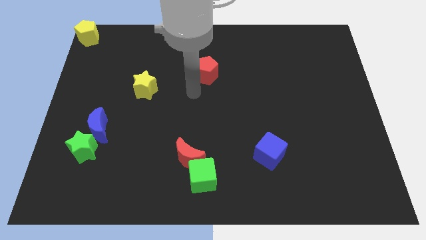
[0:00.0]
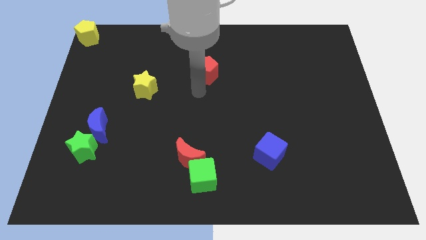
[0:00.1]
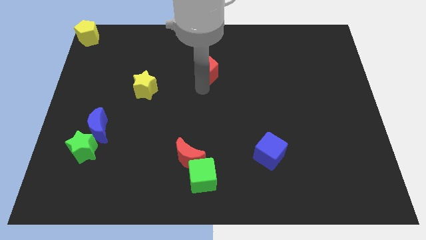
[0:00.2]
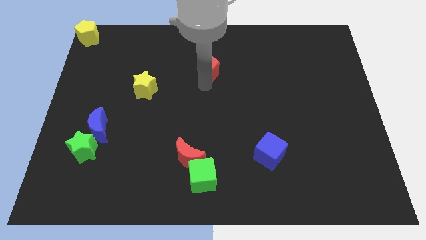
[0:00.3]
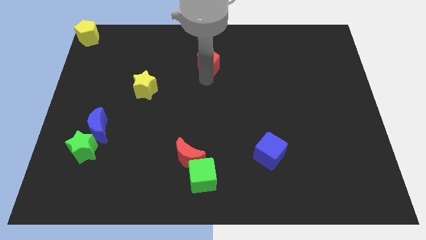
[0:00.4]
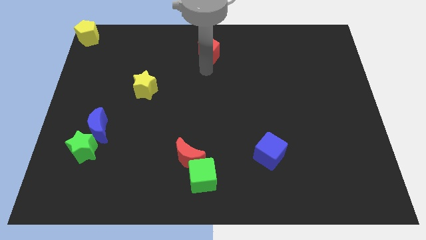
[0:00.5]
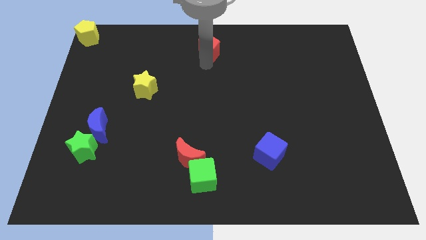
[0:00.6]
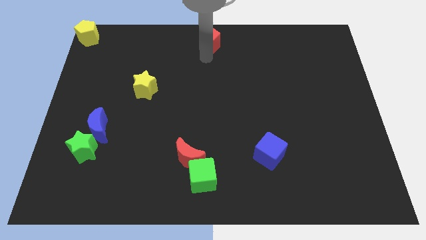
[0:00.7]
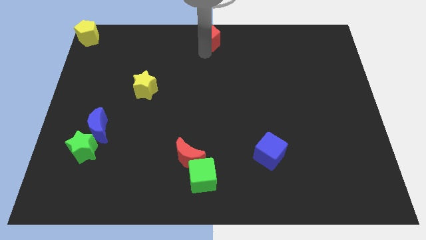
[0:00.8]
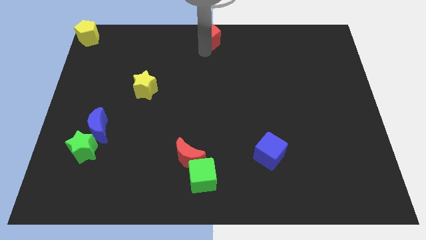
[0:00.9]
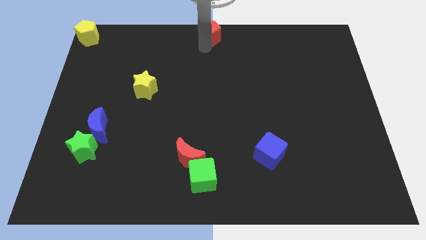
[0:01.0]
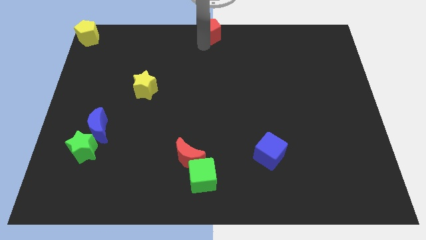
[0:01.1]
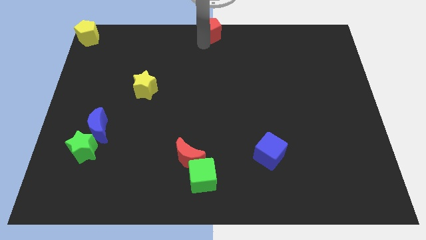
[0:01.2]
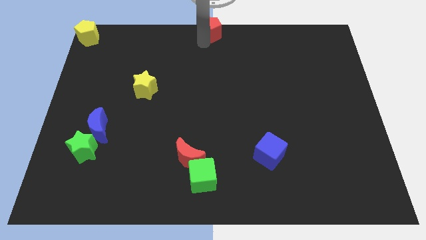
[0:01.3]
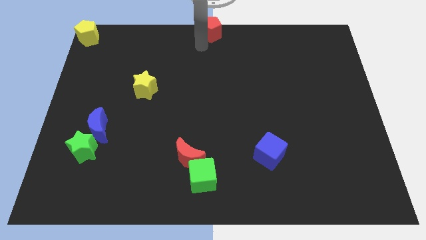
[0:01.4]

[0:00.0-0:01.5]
move the red pentagon to the top center of the board

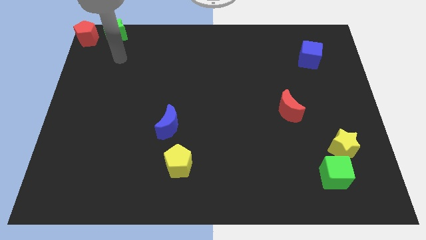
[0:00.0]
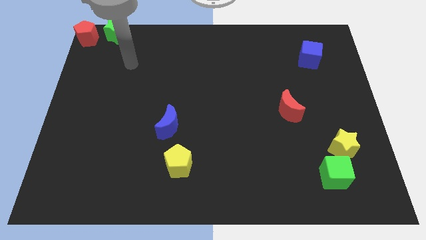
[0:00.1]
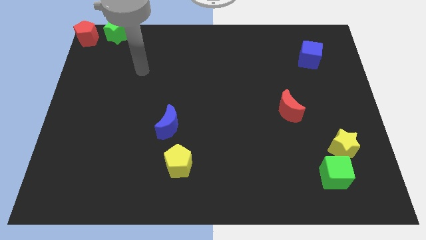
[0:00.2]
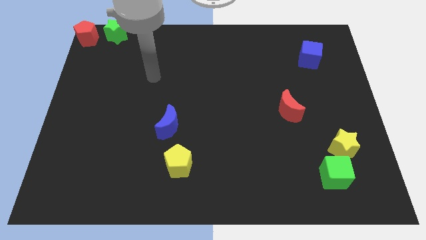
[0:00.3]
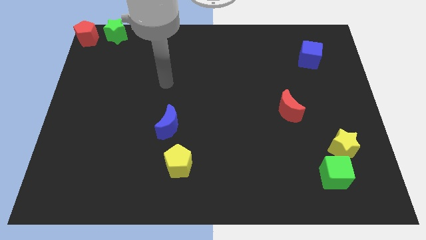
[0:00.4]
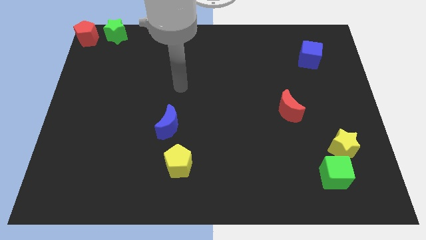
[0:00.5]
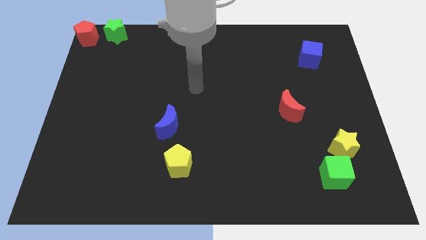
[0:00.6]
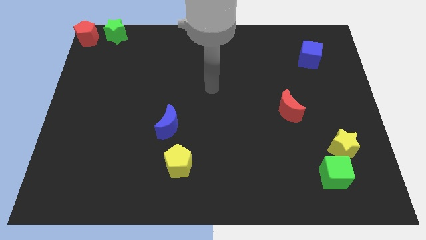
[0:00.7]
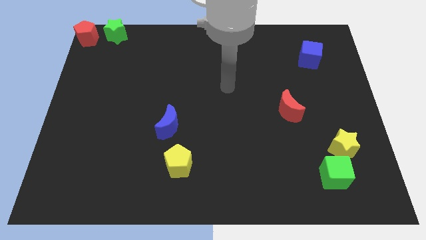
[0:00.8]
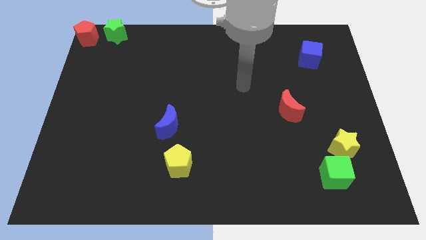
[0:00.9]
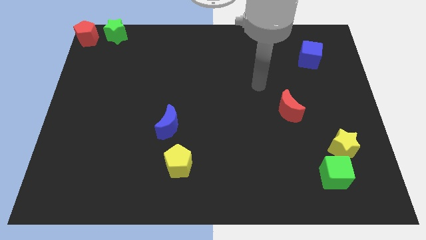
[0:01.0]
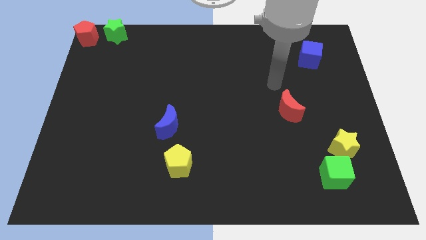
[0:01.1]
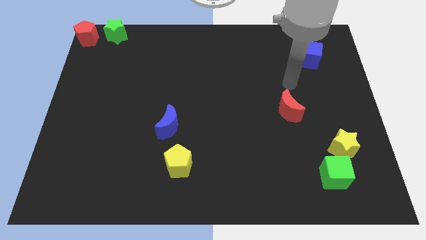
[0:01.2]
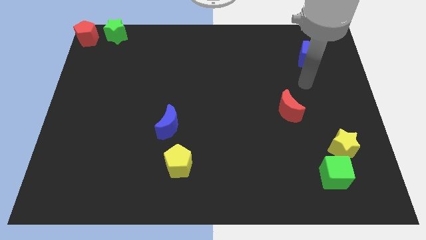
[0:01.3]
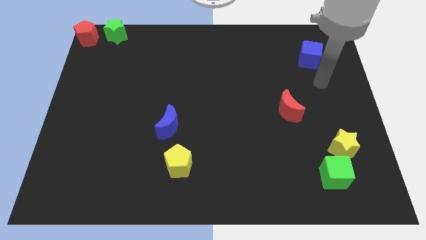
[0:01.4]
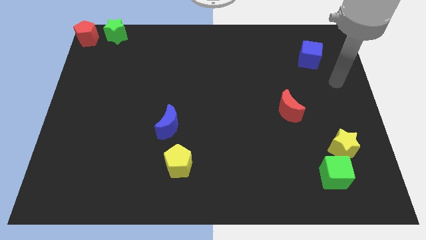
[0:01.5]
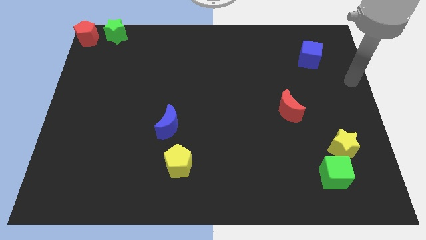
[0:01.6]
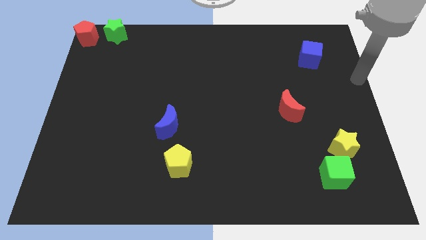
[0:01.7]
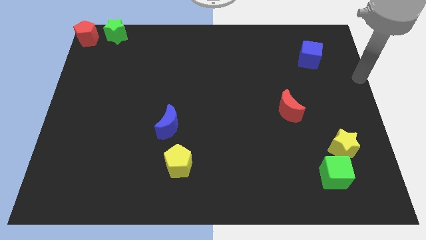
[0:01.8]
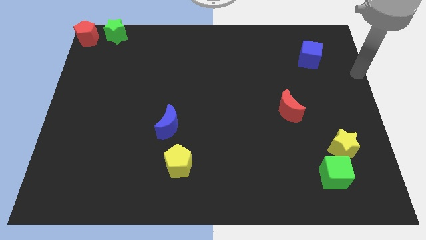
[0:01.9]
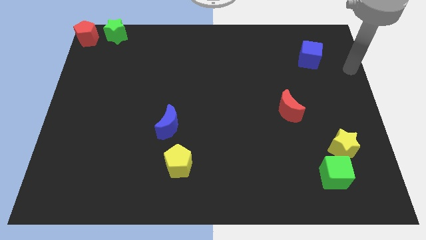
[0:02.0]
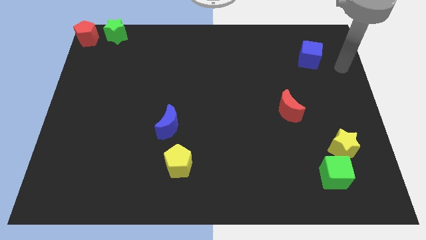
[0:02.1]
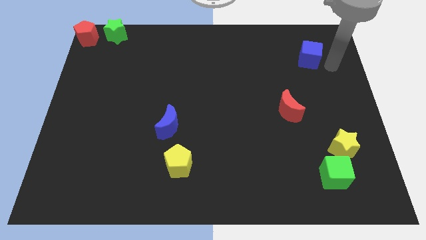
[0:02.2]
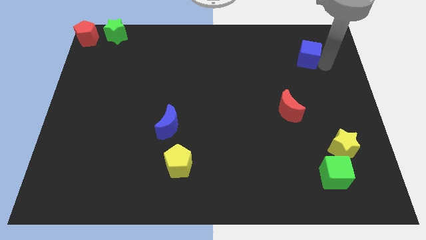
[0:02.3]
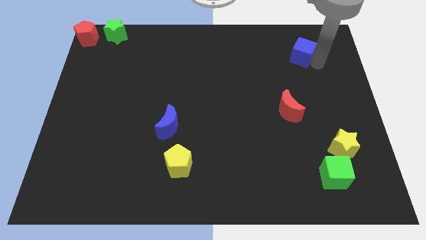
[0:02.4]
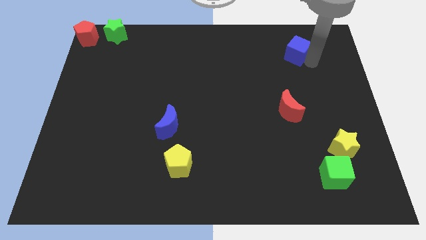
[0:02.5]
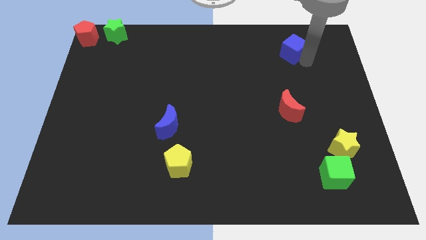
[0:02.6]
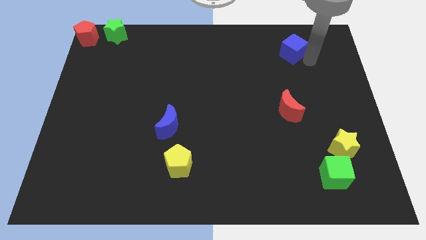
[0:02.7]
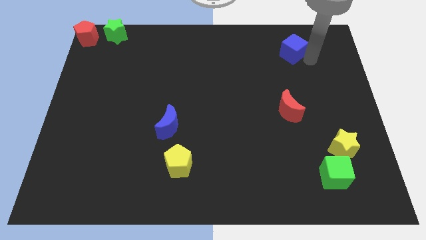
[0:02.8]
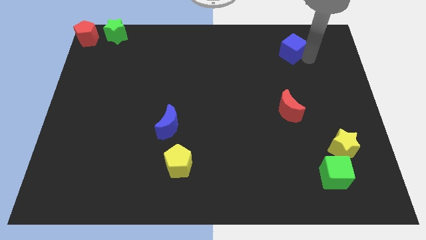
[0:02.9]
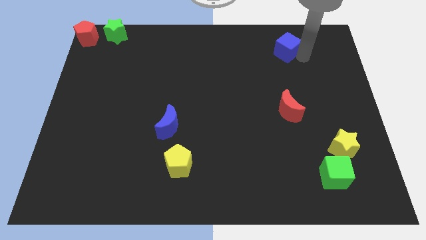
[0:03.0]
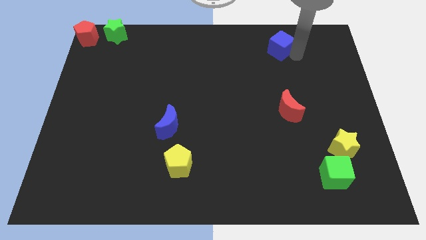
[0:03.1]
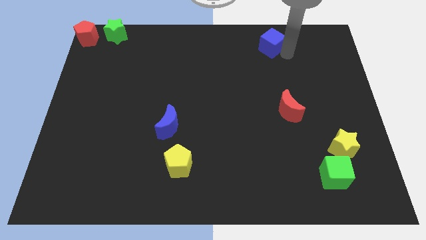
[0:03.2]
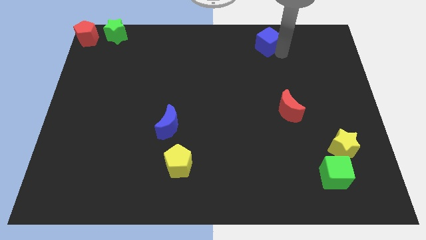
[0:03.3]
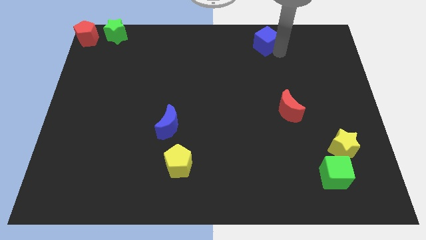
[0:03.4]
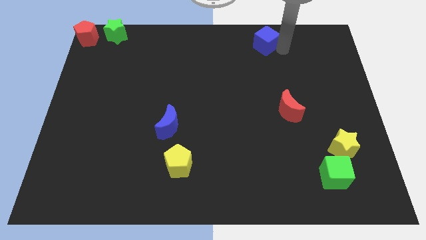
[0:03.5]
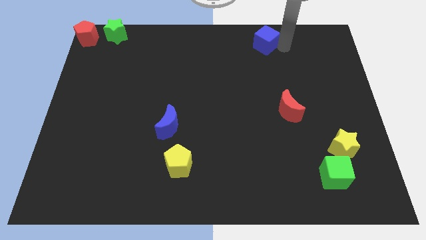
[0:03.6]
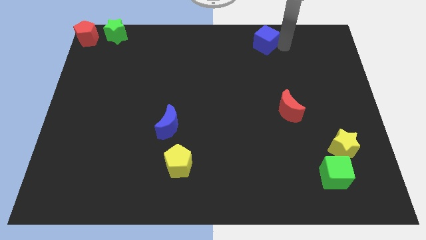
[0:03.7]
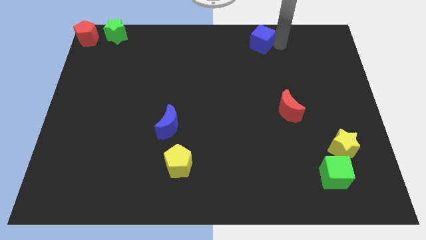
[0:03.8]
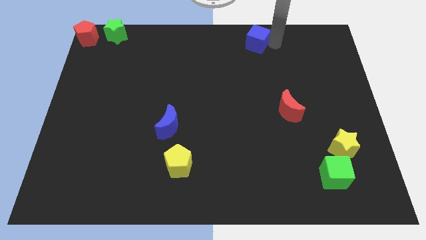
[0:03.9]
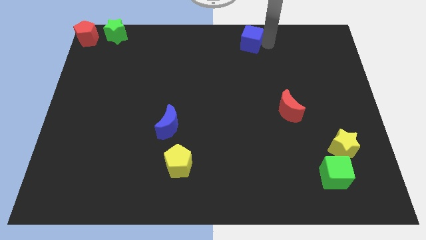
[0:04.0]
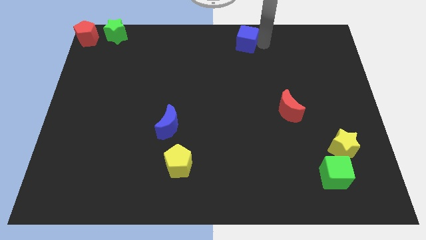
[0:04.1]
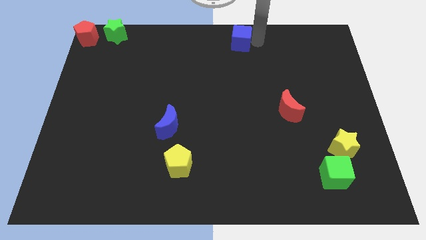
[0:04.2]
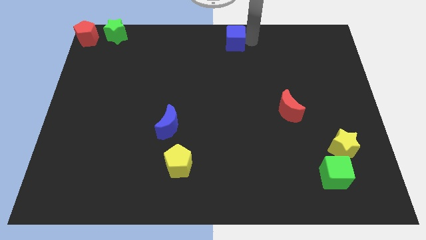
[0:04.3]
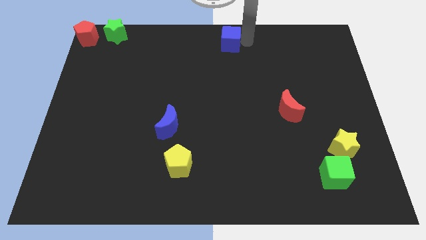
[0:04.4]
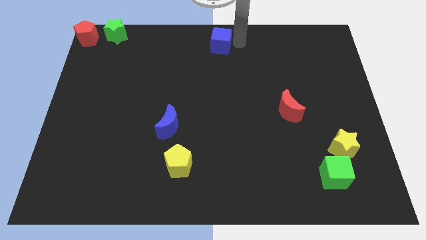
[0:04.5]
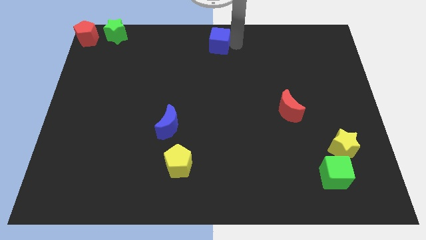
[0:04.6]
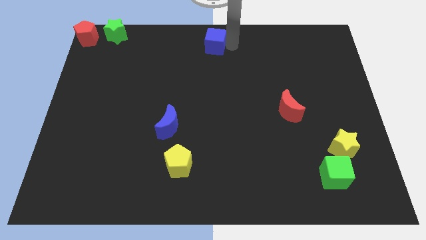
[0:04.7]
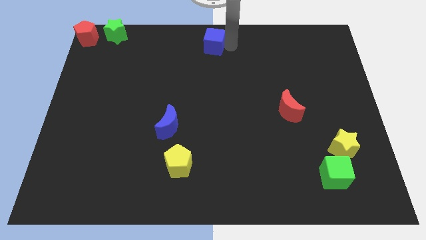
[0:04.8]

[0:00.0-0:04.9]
move the blue cube to the center of the board

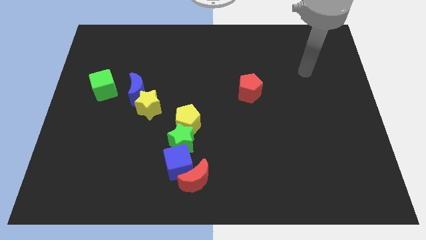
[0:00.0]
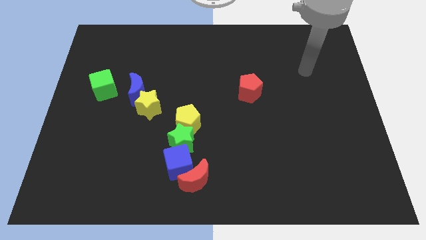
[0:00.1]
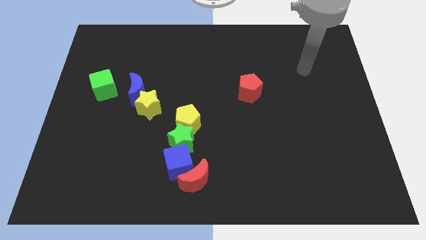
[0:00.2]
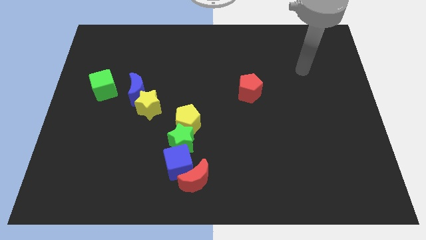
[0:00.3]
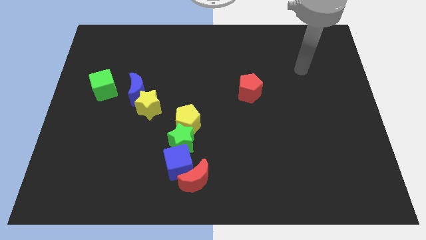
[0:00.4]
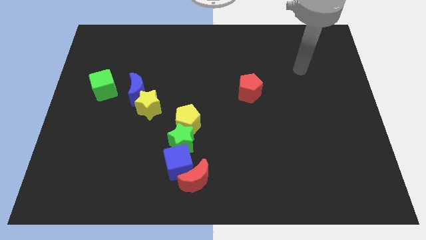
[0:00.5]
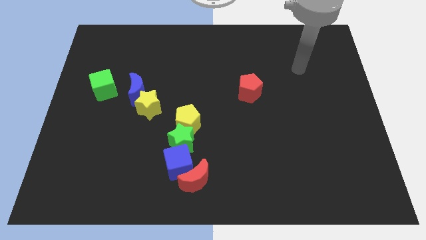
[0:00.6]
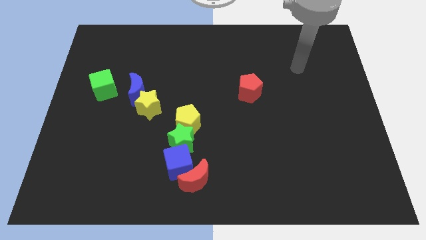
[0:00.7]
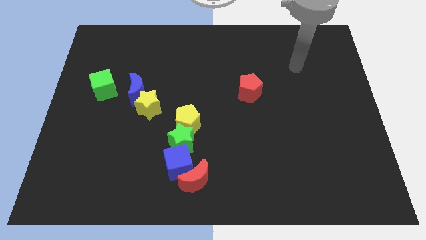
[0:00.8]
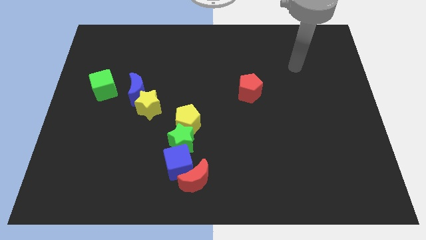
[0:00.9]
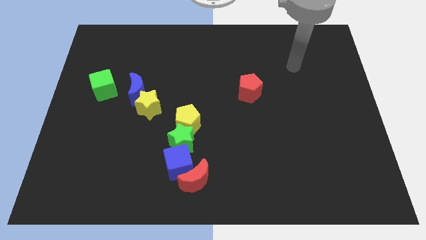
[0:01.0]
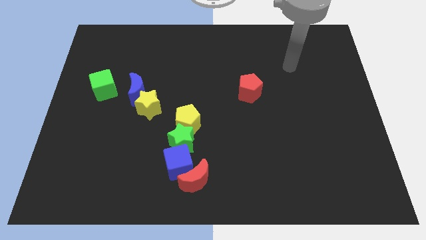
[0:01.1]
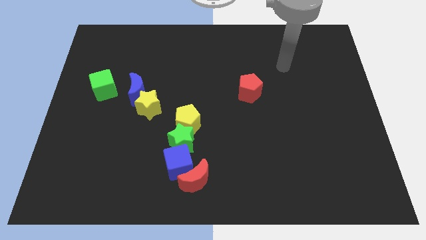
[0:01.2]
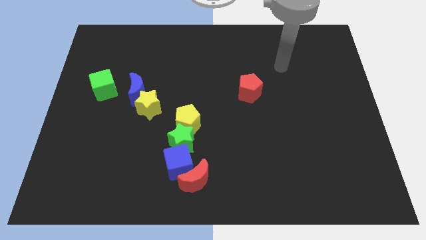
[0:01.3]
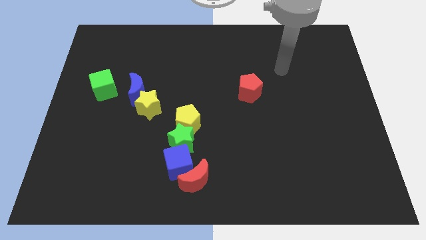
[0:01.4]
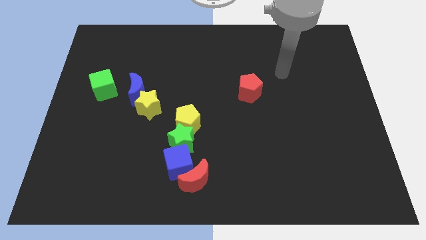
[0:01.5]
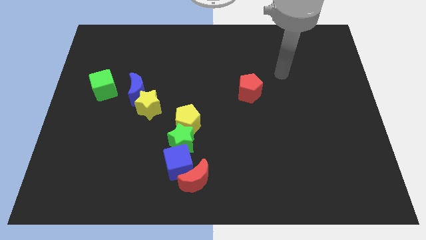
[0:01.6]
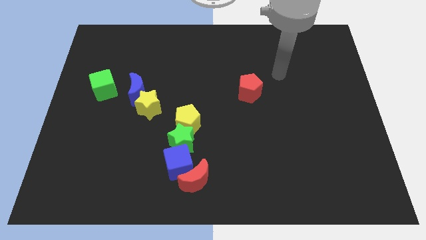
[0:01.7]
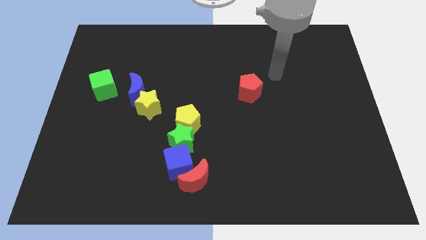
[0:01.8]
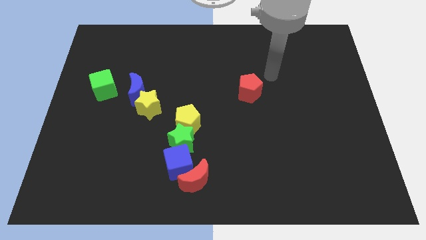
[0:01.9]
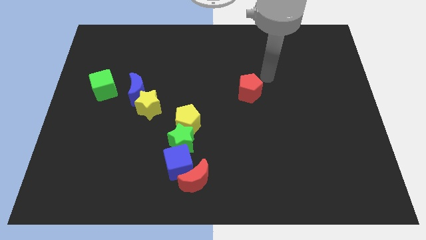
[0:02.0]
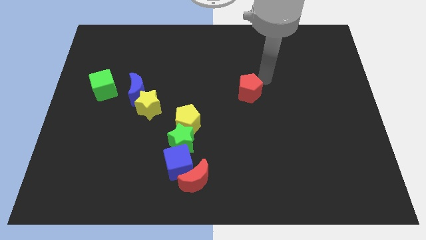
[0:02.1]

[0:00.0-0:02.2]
move the arm to the top right of the red pentagon

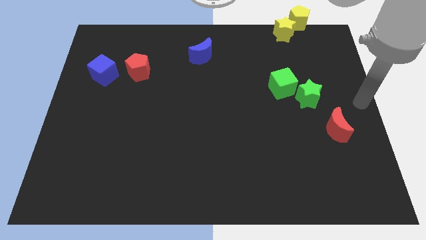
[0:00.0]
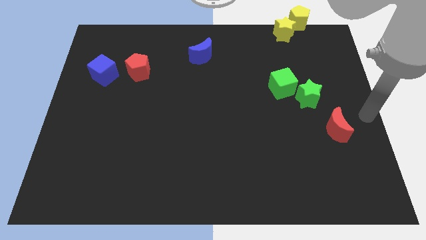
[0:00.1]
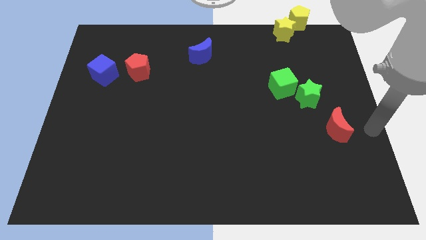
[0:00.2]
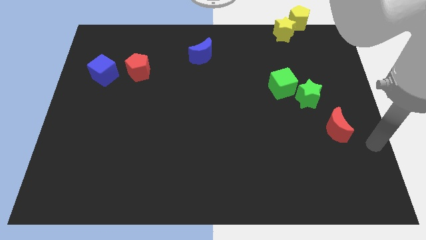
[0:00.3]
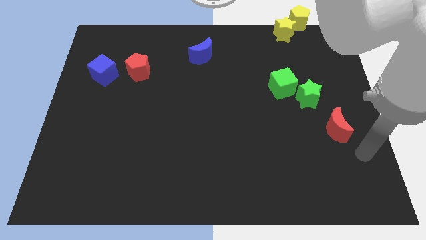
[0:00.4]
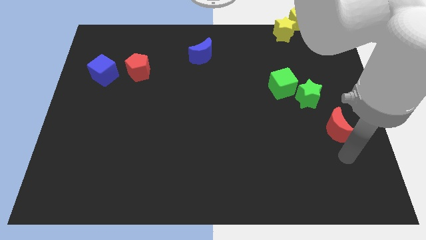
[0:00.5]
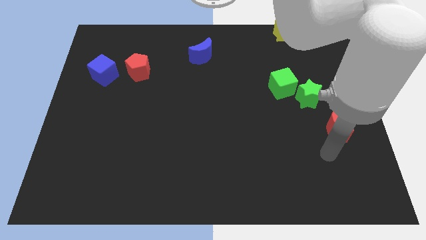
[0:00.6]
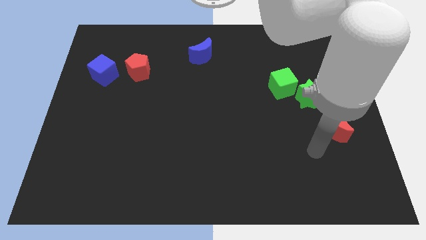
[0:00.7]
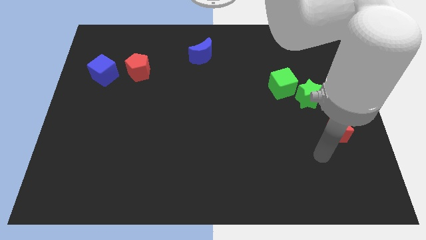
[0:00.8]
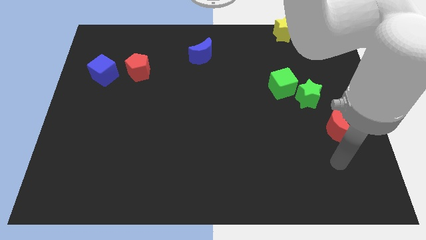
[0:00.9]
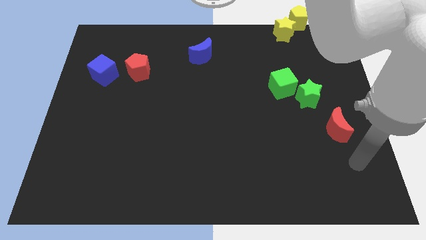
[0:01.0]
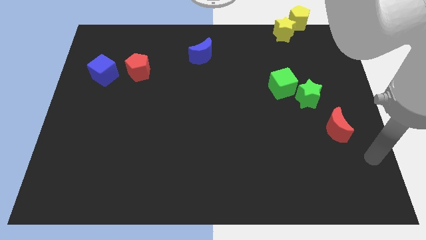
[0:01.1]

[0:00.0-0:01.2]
move your arm to the bottom right of the board
